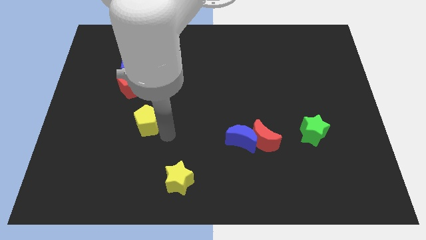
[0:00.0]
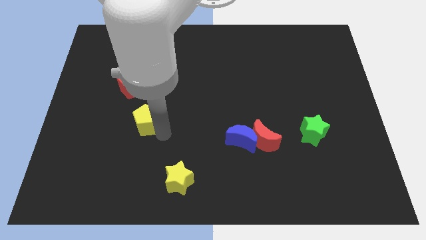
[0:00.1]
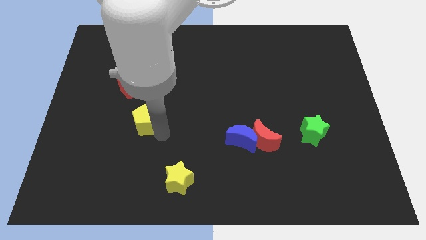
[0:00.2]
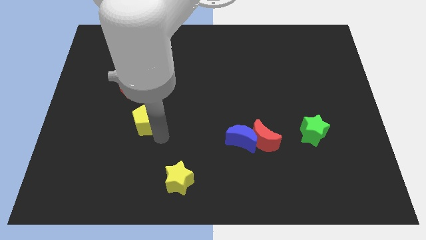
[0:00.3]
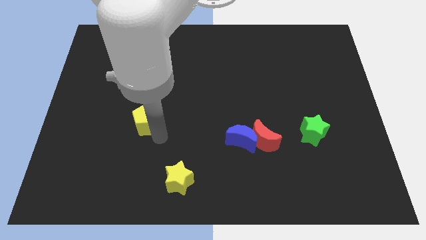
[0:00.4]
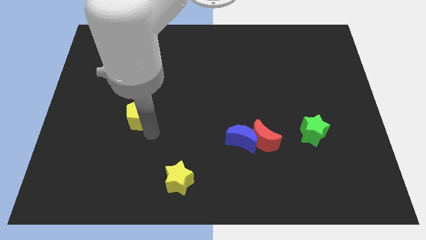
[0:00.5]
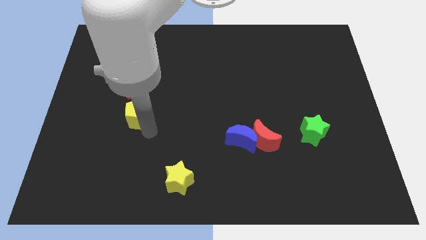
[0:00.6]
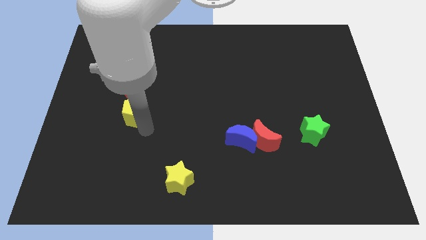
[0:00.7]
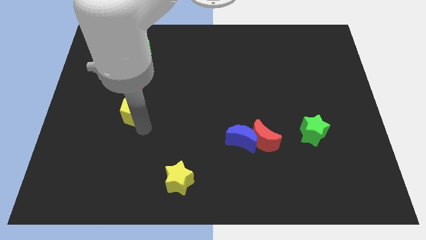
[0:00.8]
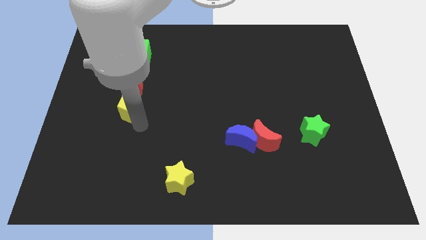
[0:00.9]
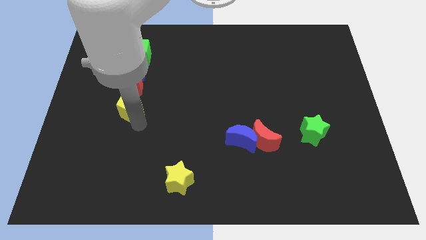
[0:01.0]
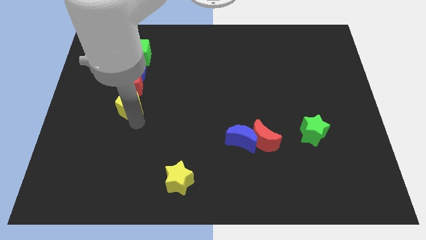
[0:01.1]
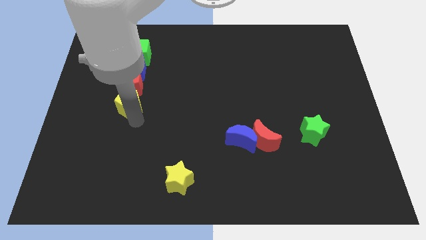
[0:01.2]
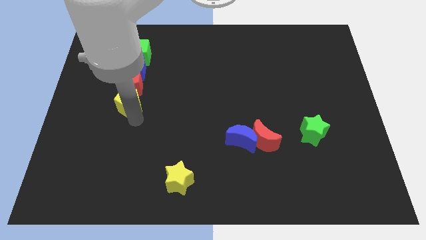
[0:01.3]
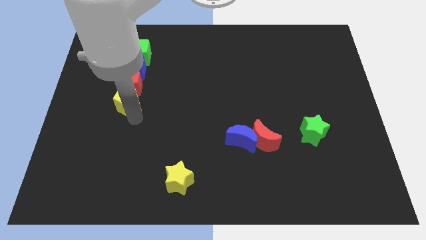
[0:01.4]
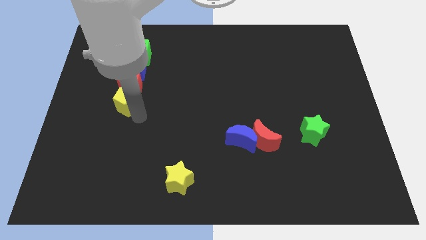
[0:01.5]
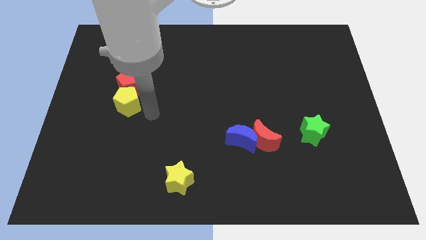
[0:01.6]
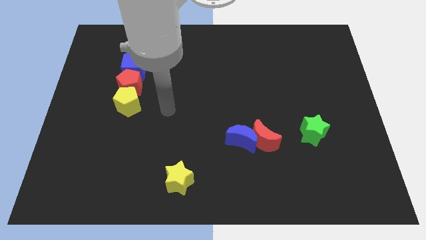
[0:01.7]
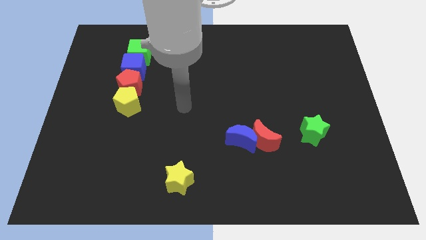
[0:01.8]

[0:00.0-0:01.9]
push the yellow pentagon below red pentagon to form a line

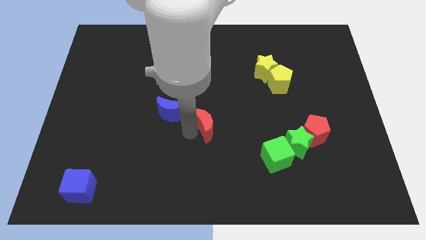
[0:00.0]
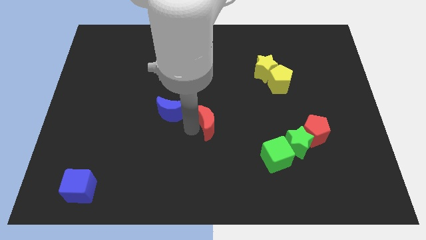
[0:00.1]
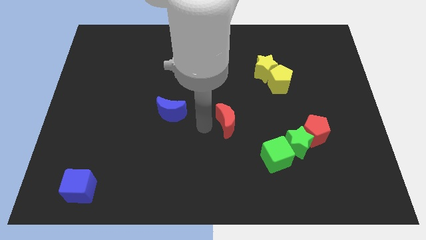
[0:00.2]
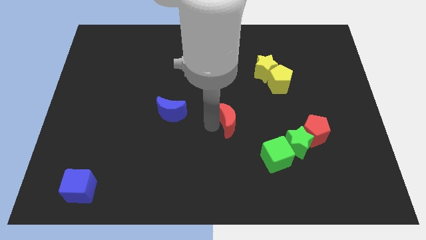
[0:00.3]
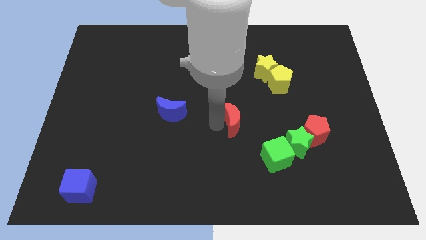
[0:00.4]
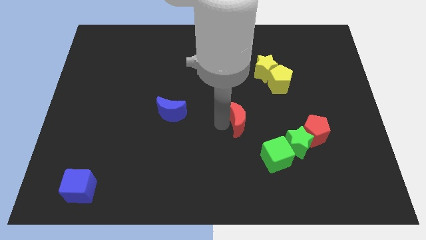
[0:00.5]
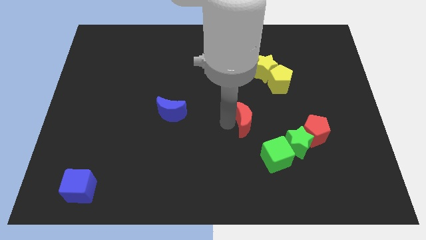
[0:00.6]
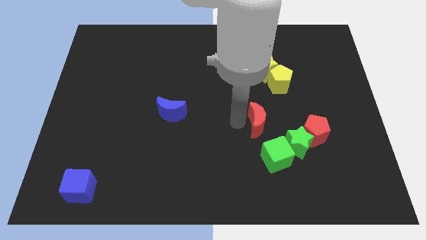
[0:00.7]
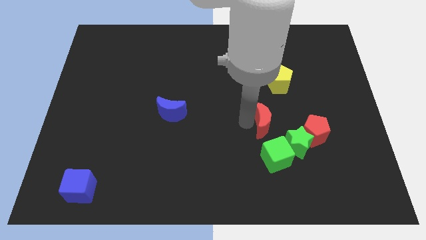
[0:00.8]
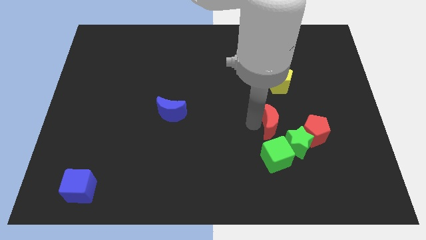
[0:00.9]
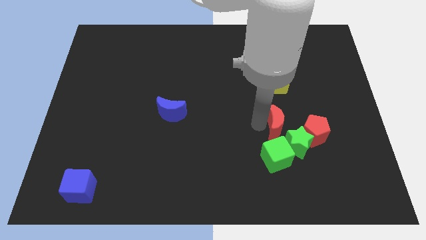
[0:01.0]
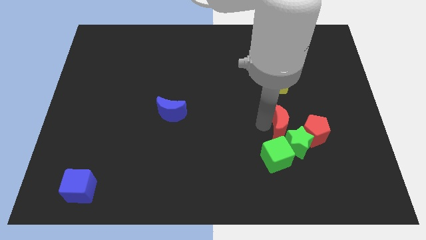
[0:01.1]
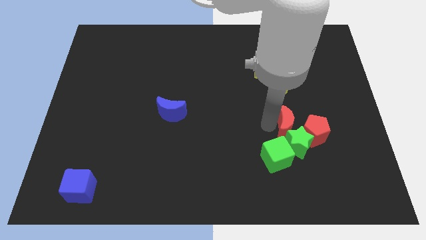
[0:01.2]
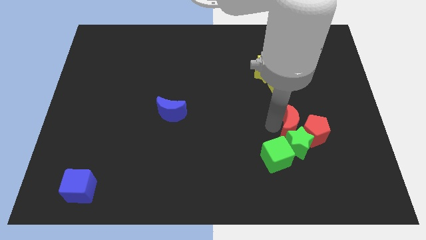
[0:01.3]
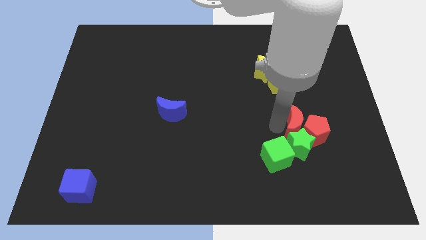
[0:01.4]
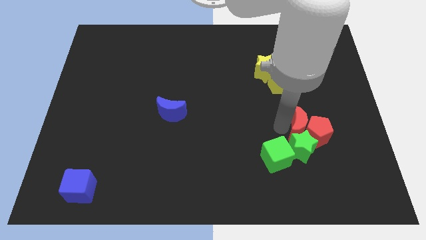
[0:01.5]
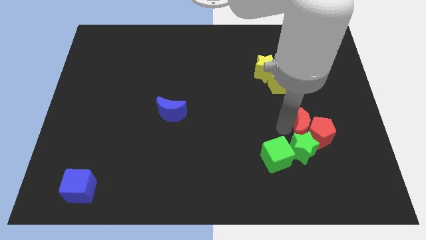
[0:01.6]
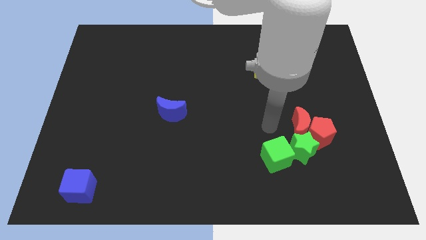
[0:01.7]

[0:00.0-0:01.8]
push the red moon in to the red pentagon

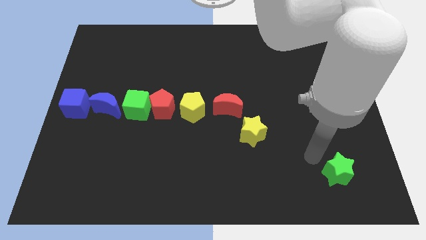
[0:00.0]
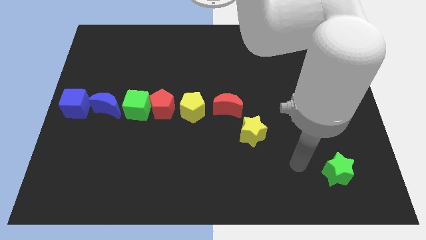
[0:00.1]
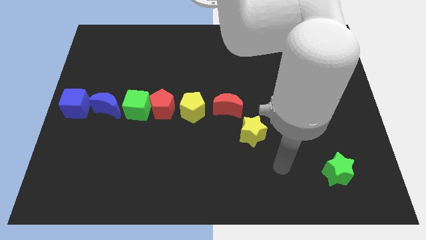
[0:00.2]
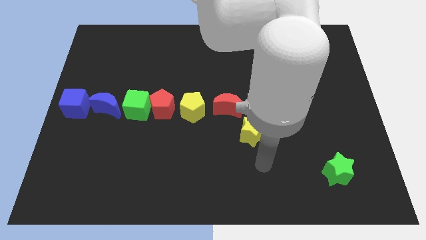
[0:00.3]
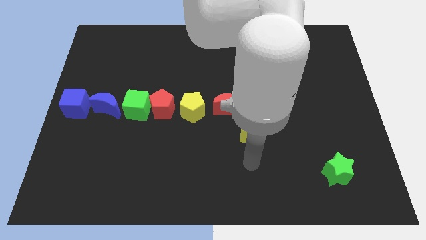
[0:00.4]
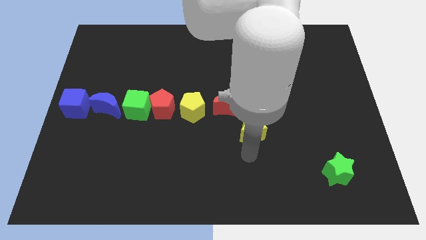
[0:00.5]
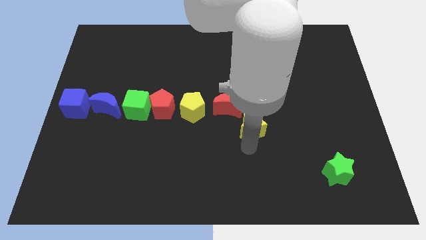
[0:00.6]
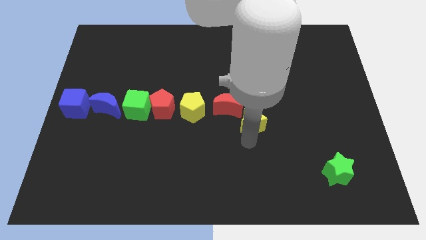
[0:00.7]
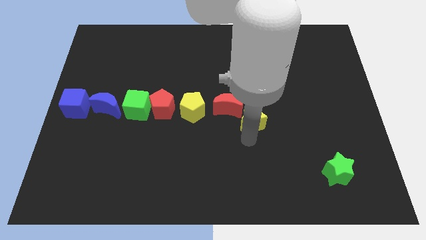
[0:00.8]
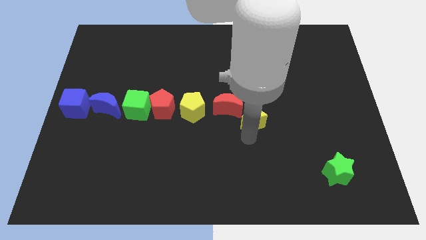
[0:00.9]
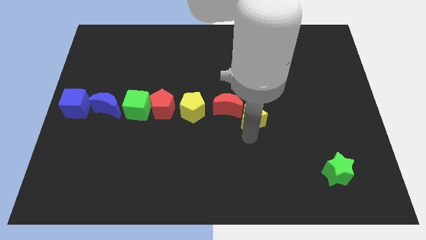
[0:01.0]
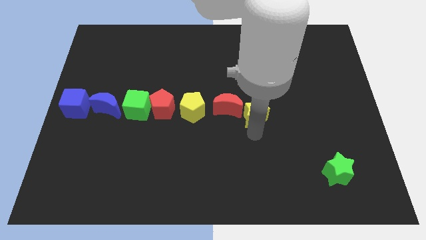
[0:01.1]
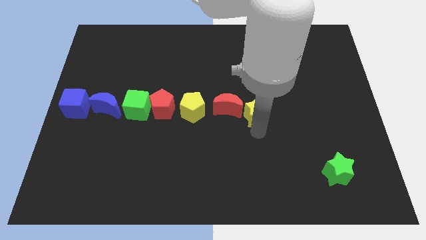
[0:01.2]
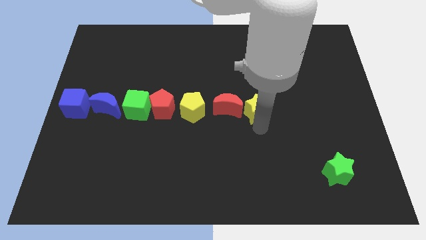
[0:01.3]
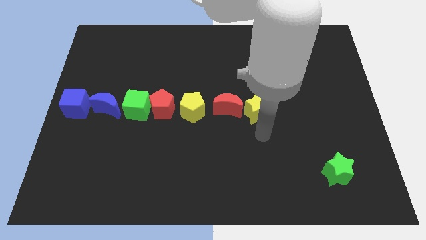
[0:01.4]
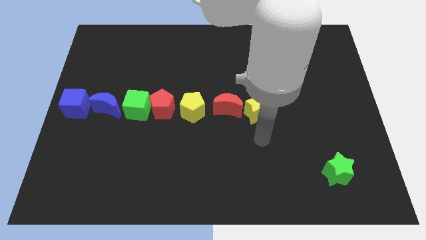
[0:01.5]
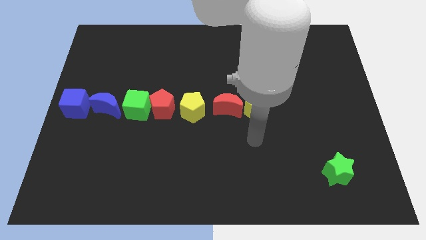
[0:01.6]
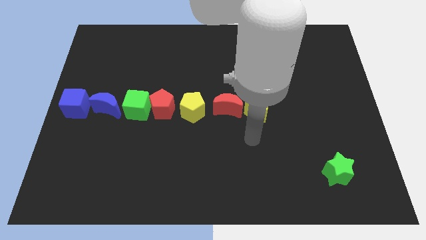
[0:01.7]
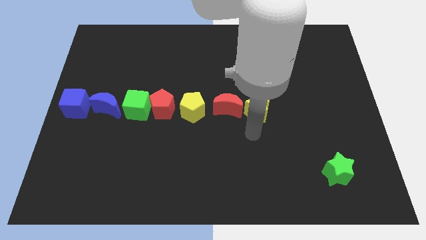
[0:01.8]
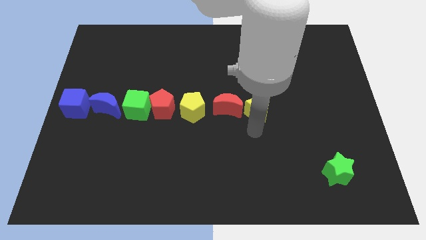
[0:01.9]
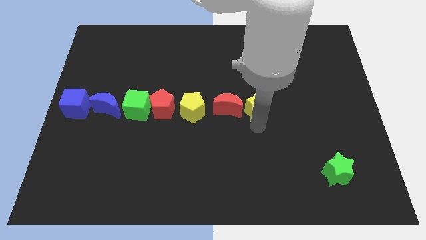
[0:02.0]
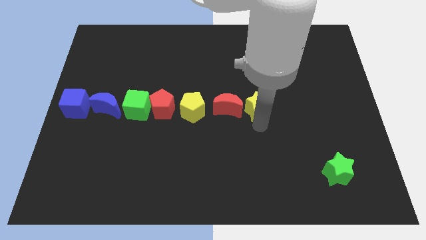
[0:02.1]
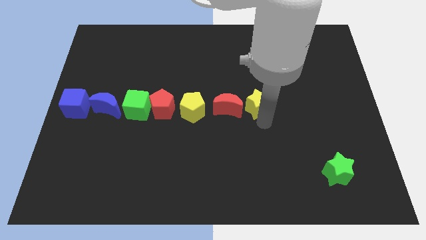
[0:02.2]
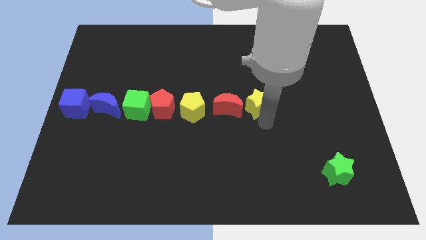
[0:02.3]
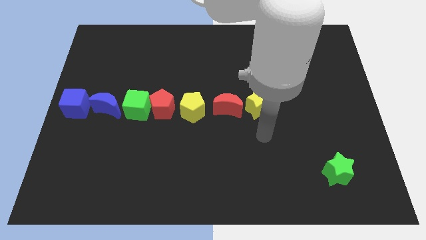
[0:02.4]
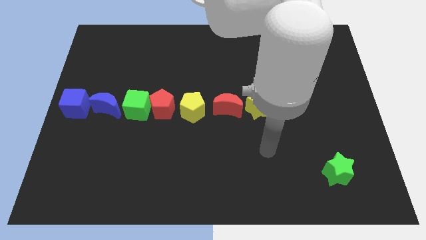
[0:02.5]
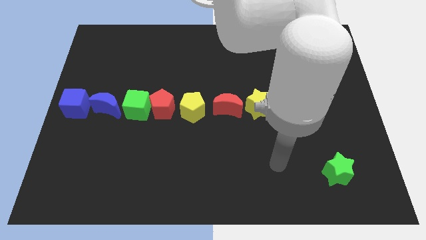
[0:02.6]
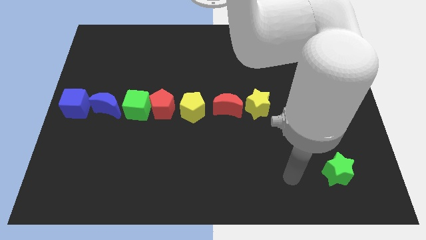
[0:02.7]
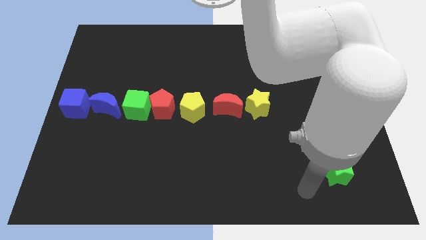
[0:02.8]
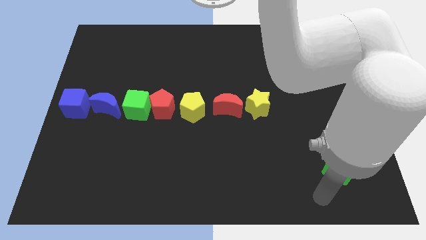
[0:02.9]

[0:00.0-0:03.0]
move the yellow star to the right of the red crescent

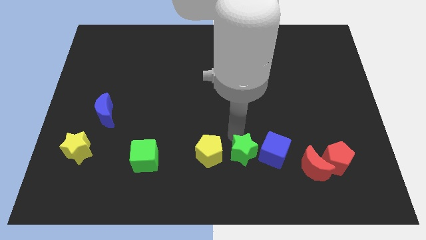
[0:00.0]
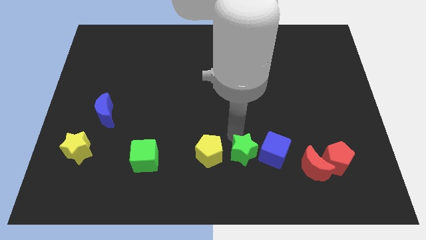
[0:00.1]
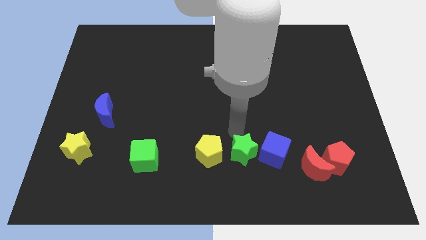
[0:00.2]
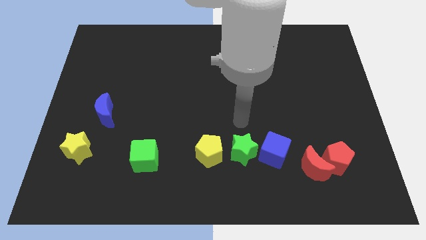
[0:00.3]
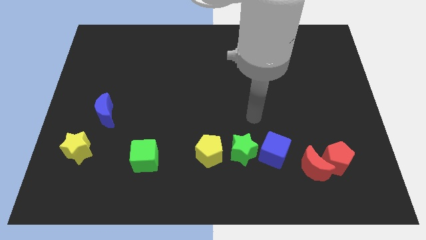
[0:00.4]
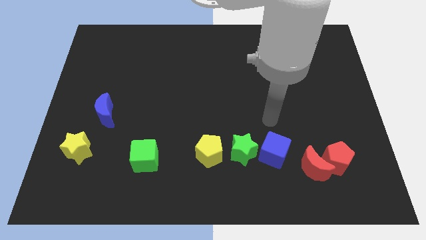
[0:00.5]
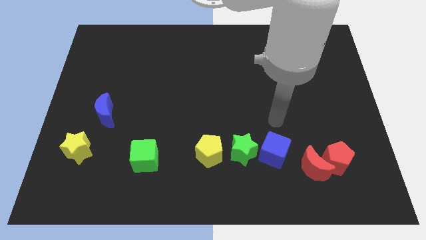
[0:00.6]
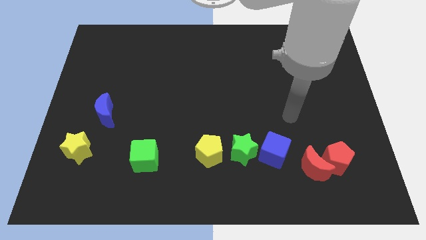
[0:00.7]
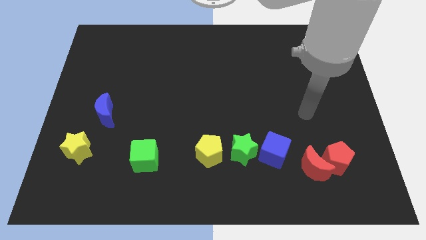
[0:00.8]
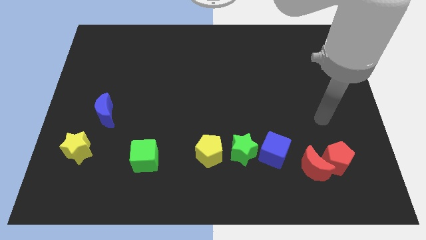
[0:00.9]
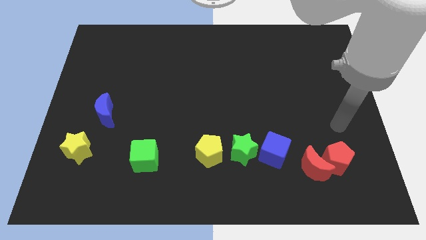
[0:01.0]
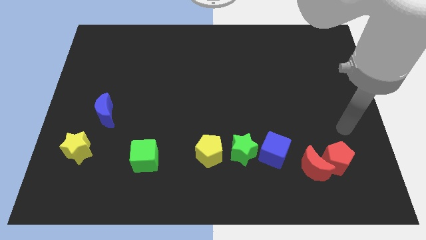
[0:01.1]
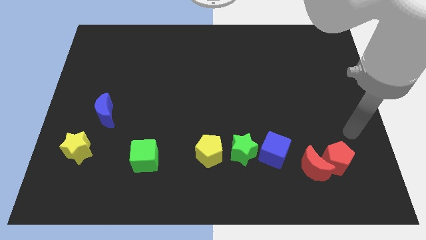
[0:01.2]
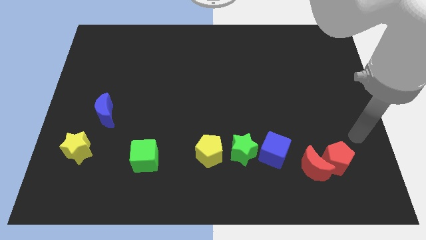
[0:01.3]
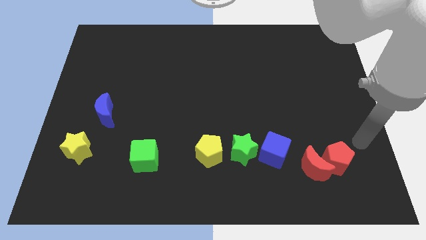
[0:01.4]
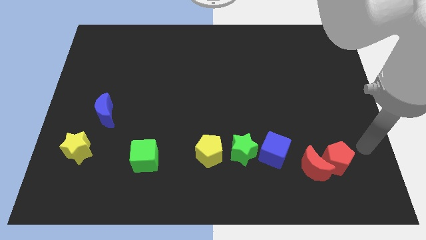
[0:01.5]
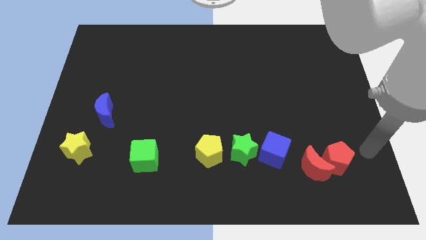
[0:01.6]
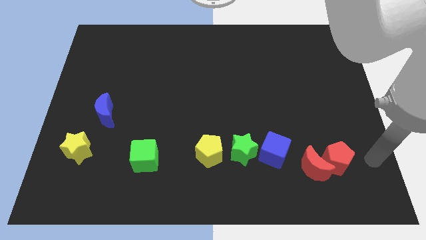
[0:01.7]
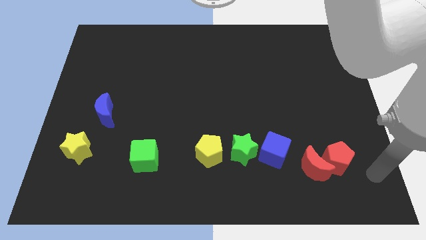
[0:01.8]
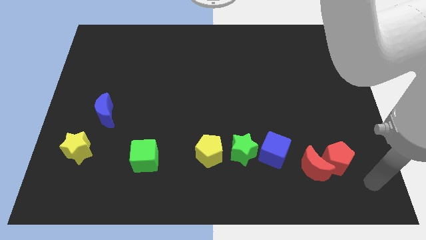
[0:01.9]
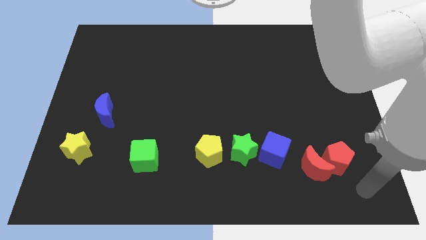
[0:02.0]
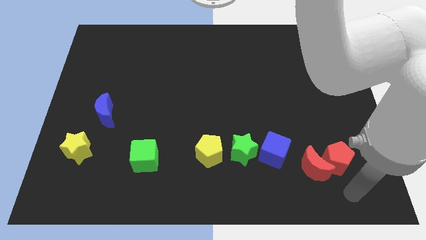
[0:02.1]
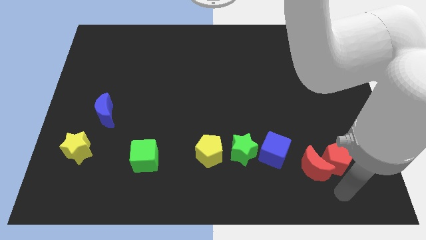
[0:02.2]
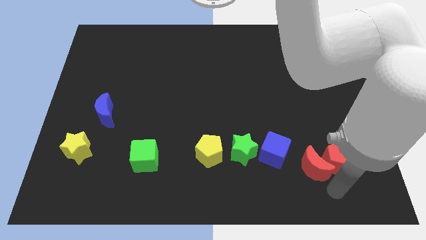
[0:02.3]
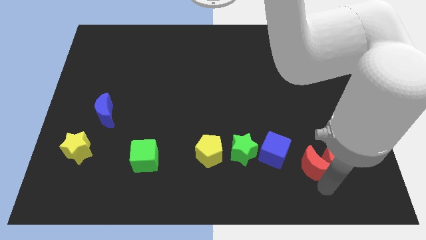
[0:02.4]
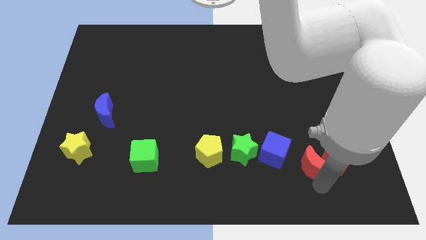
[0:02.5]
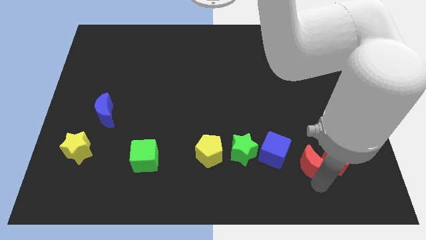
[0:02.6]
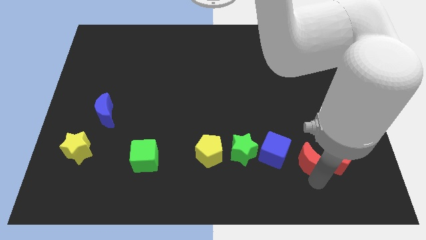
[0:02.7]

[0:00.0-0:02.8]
move your arm from top of the green star to bottom of the red crescent
